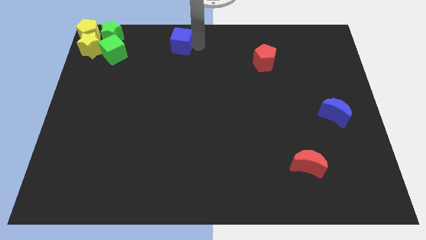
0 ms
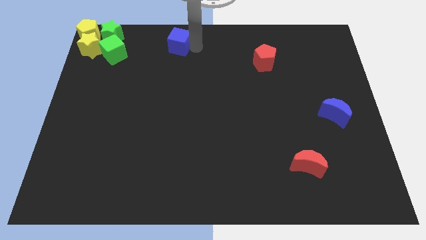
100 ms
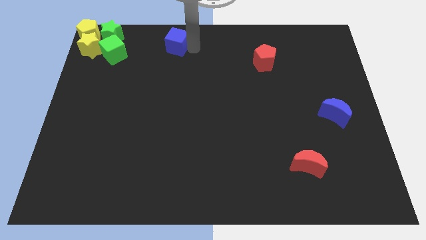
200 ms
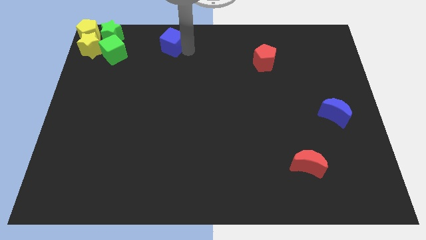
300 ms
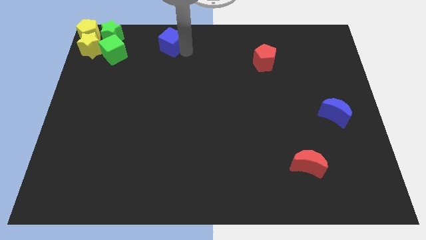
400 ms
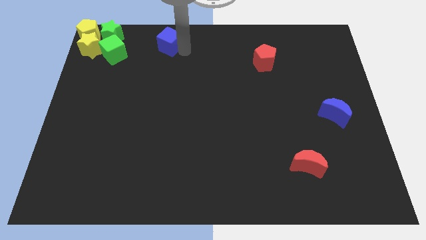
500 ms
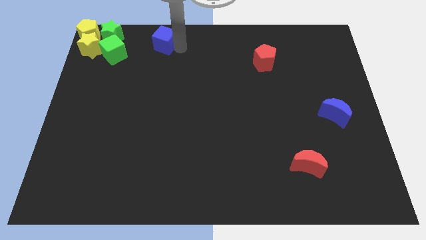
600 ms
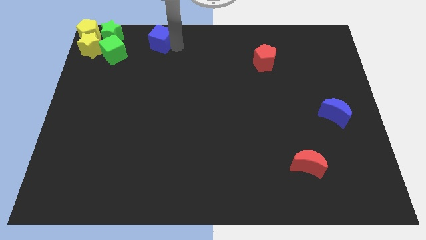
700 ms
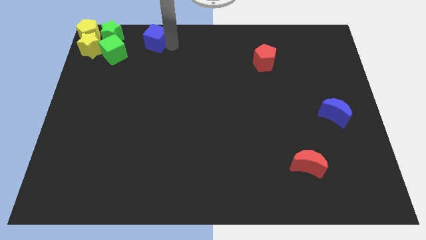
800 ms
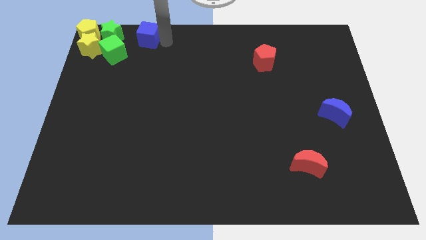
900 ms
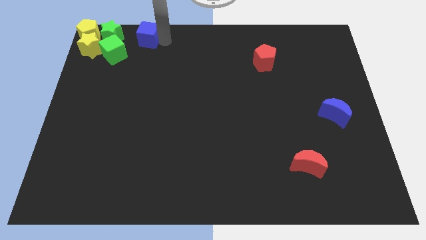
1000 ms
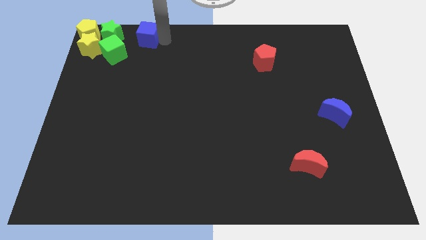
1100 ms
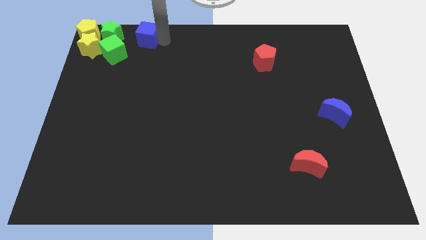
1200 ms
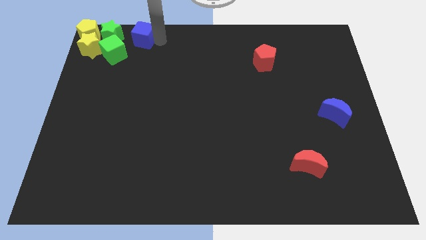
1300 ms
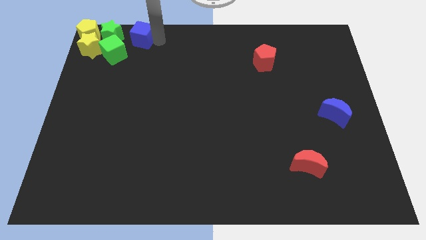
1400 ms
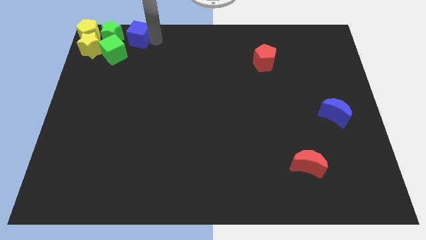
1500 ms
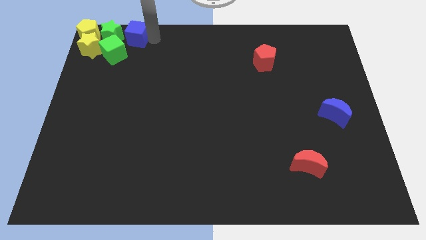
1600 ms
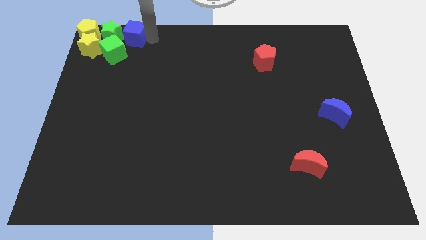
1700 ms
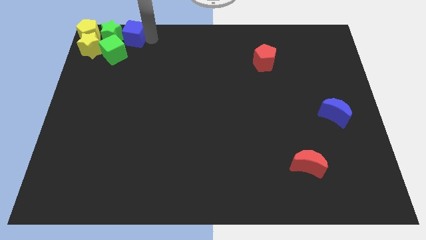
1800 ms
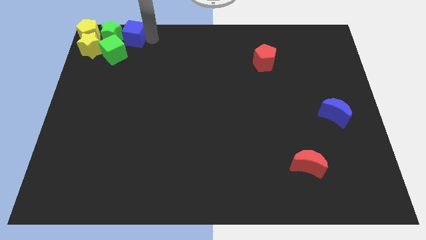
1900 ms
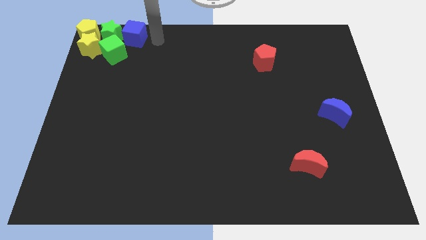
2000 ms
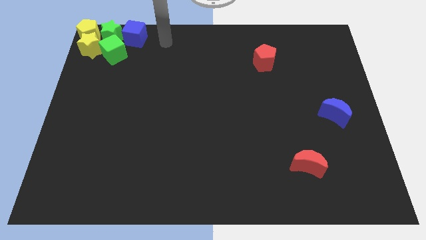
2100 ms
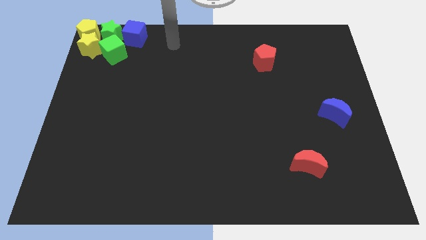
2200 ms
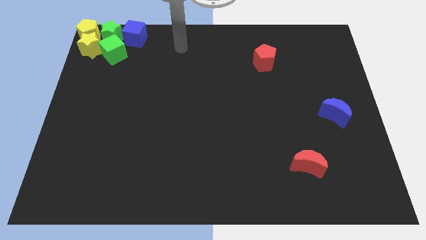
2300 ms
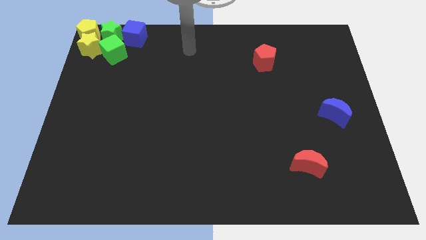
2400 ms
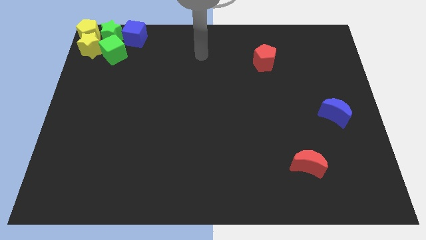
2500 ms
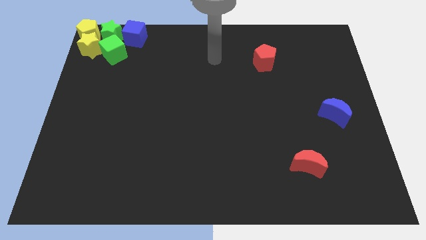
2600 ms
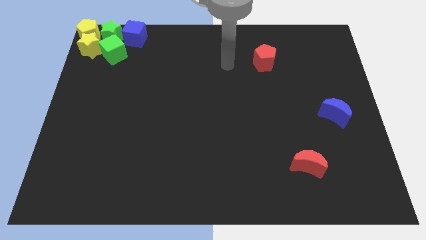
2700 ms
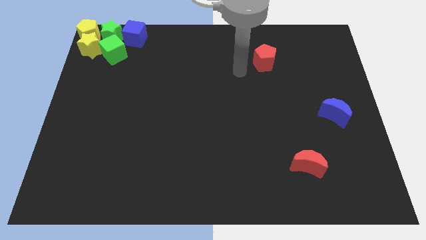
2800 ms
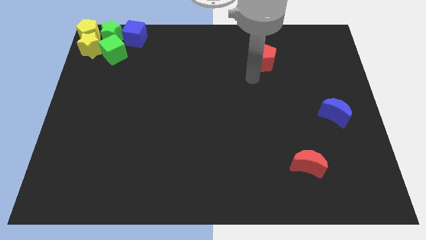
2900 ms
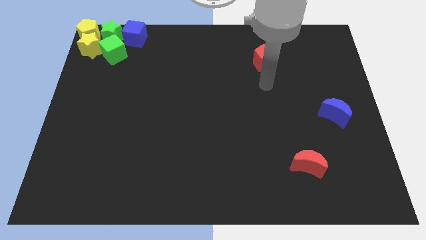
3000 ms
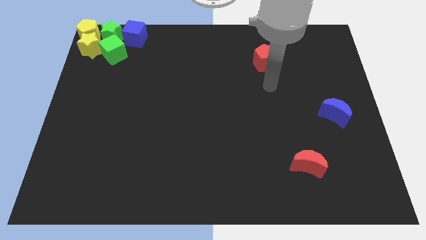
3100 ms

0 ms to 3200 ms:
push the blue cube into the green star

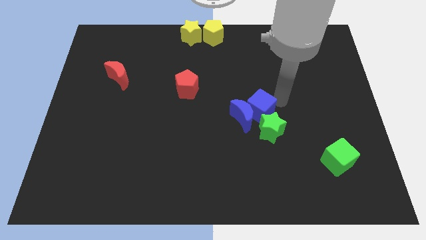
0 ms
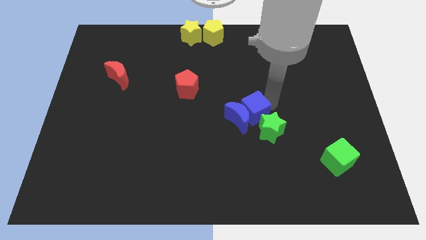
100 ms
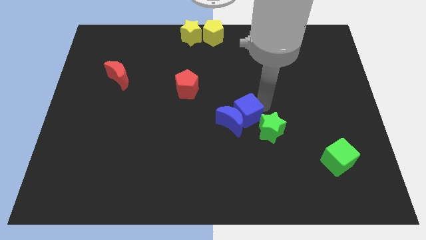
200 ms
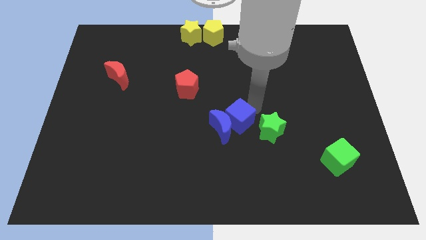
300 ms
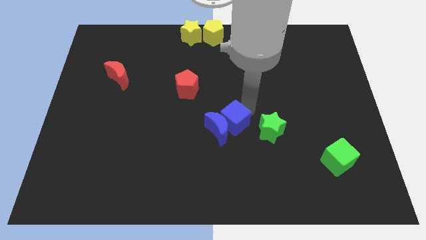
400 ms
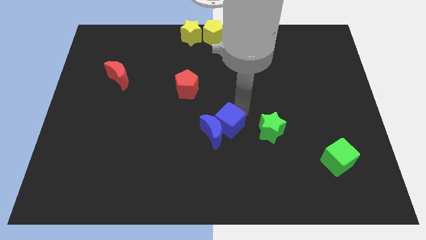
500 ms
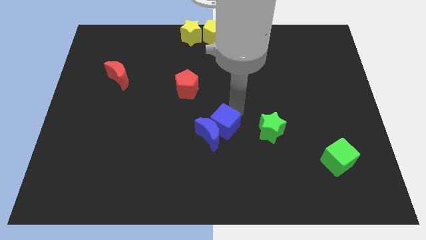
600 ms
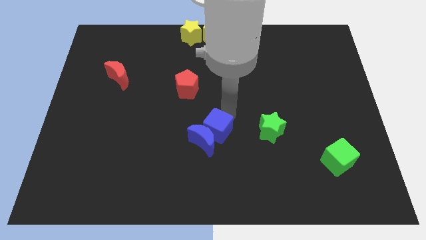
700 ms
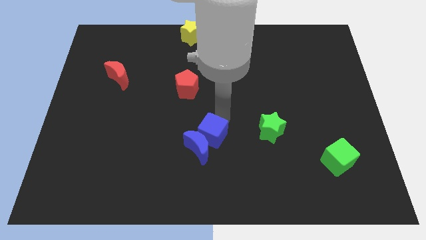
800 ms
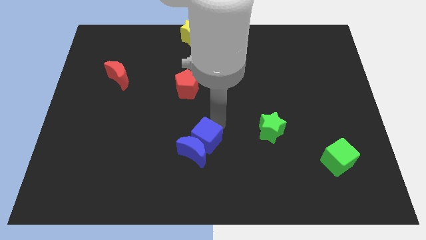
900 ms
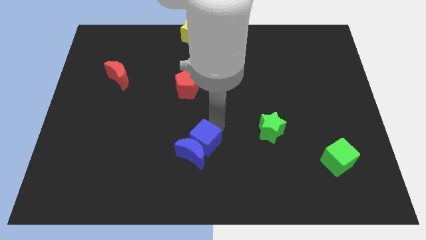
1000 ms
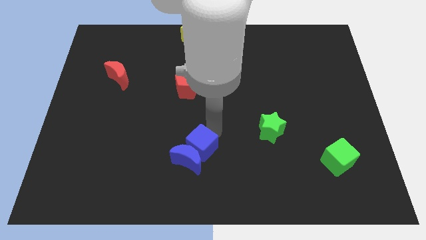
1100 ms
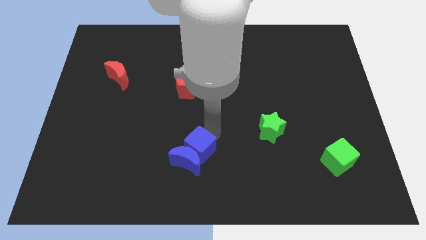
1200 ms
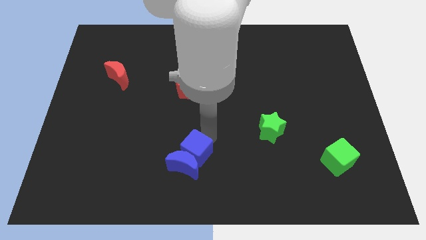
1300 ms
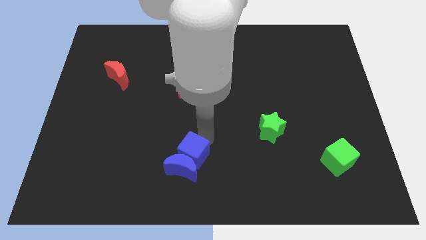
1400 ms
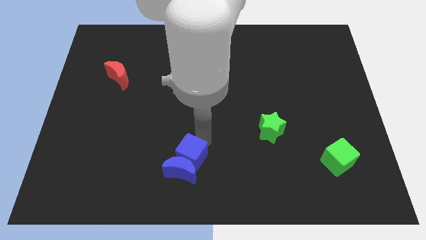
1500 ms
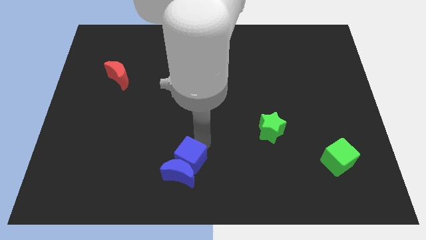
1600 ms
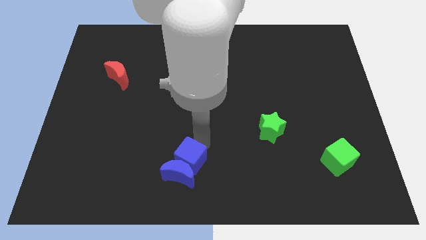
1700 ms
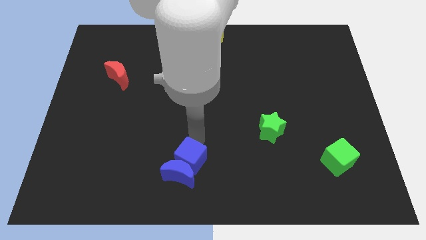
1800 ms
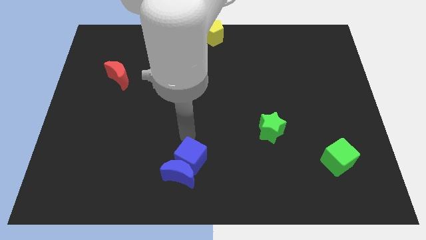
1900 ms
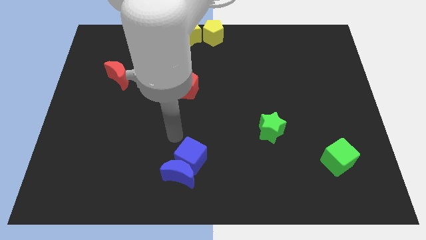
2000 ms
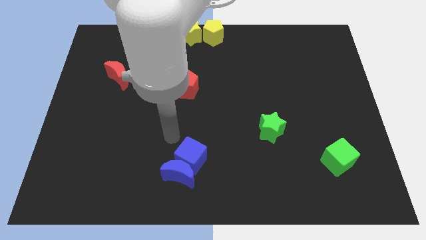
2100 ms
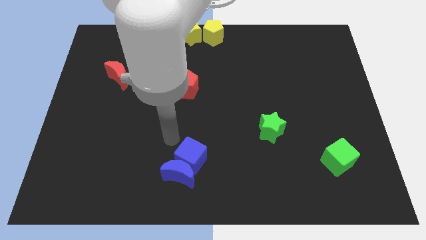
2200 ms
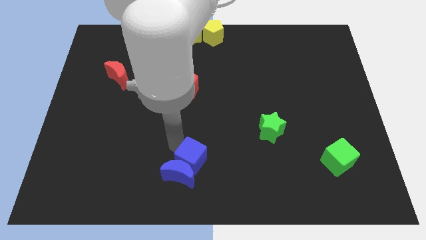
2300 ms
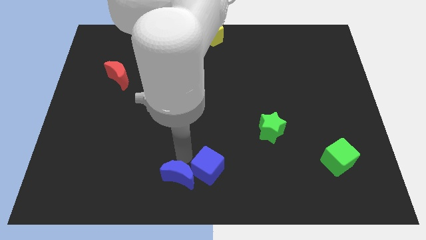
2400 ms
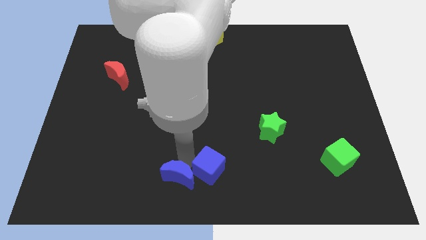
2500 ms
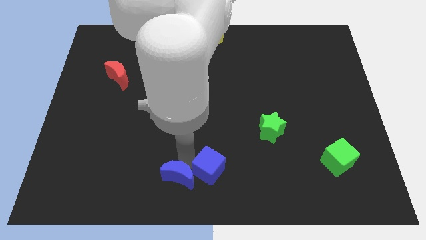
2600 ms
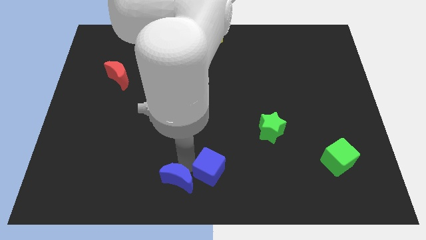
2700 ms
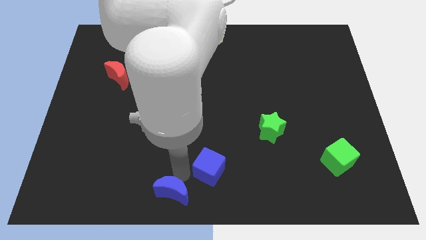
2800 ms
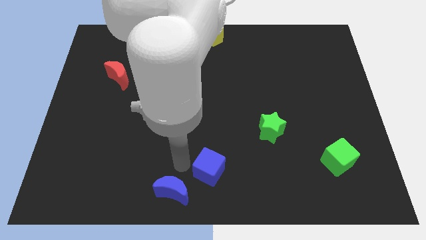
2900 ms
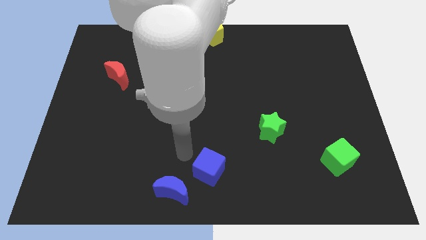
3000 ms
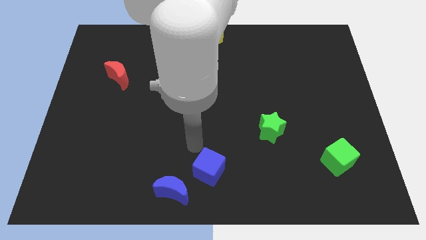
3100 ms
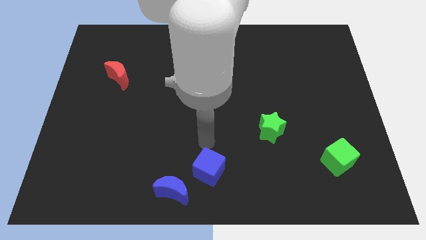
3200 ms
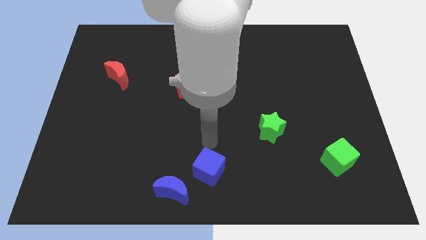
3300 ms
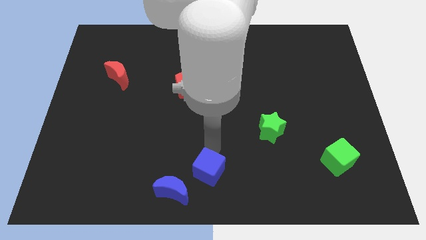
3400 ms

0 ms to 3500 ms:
move blue cube to the center

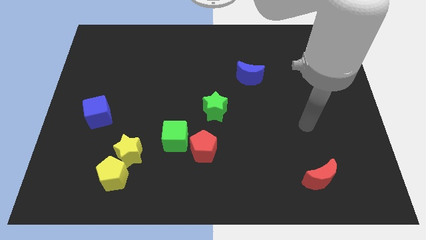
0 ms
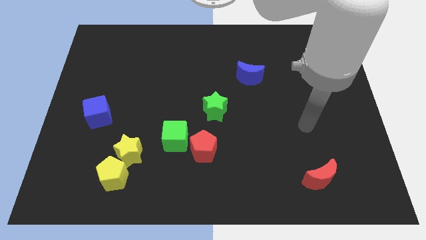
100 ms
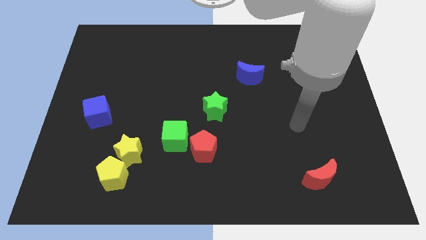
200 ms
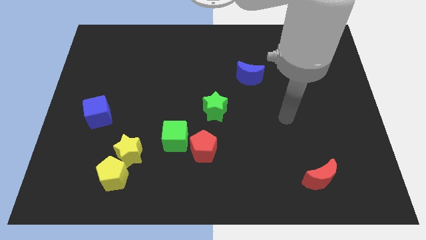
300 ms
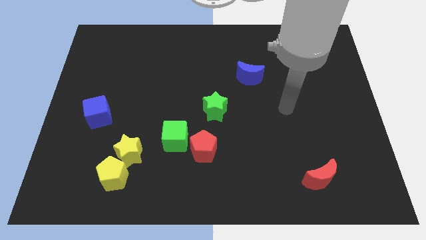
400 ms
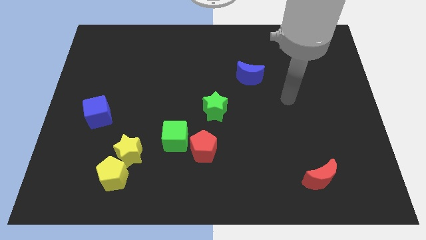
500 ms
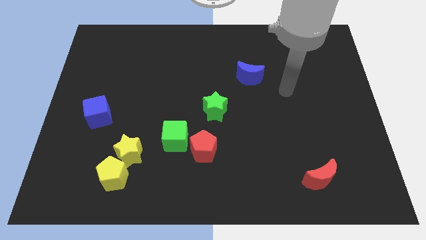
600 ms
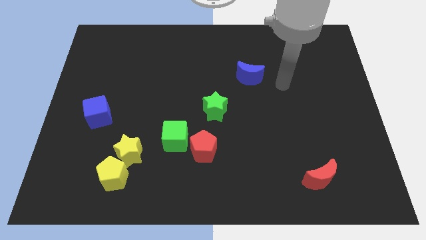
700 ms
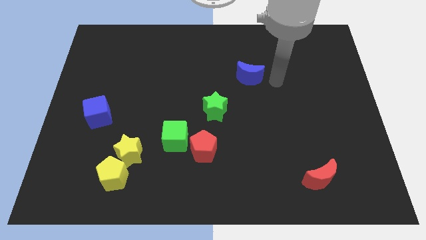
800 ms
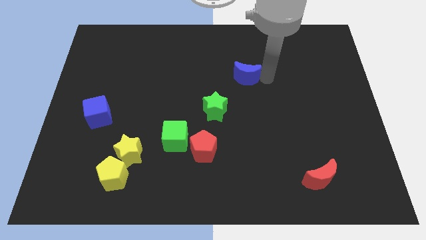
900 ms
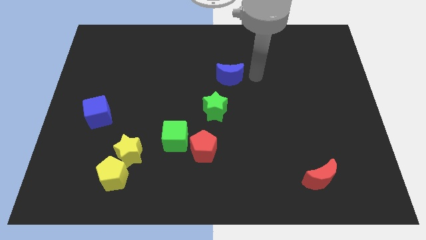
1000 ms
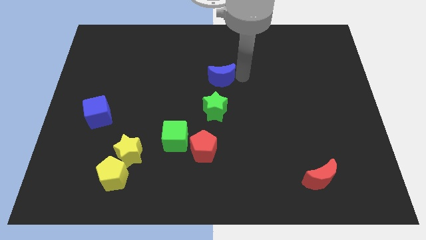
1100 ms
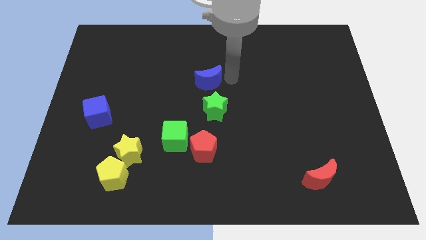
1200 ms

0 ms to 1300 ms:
slide the blue crescent slightly to the left

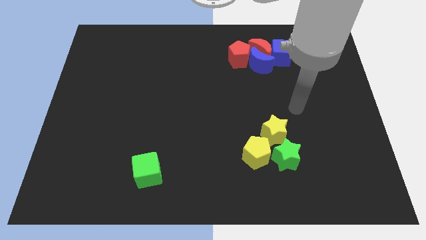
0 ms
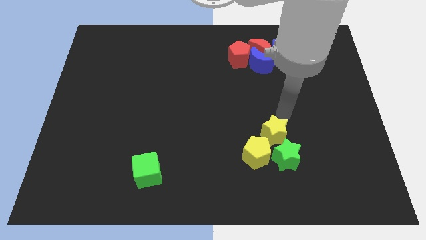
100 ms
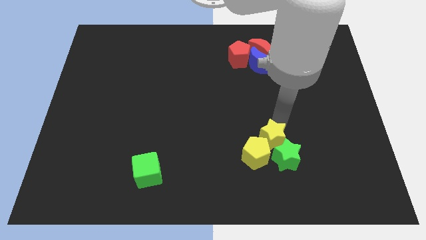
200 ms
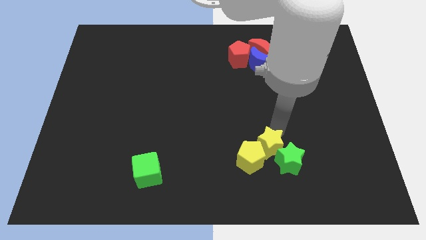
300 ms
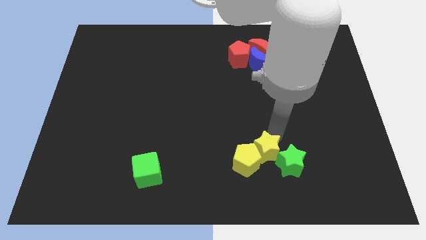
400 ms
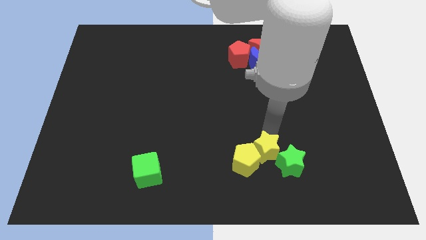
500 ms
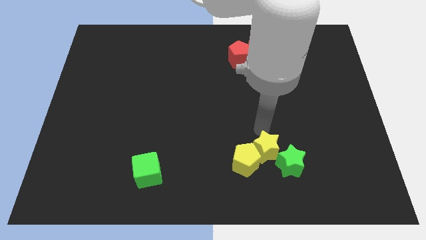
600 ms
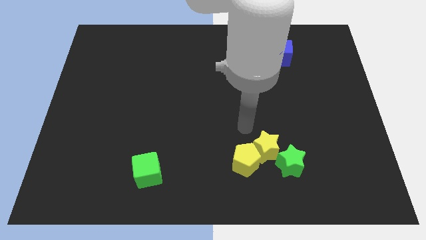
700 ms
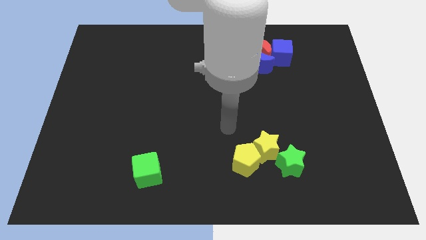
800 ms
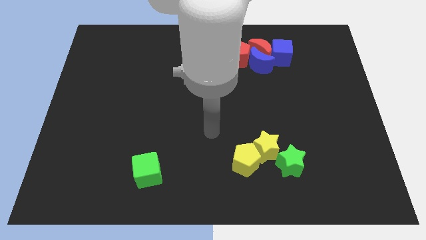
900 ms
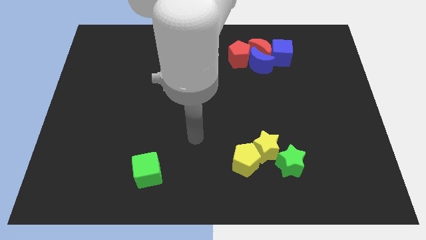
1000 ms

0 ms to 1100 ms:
push the yellow star into the yellow pentagon and green star
